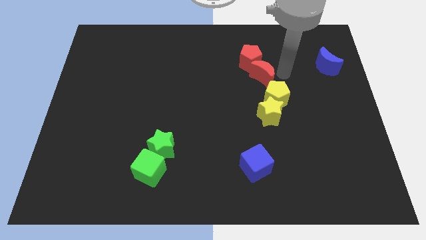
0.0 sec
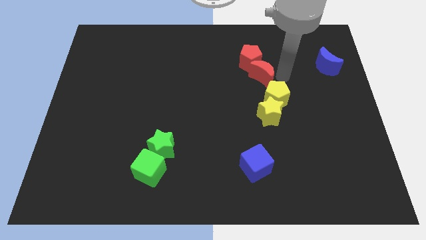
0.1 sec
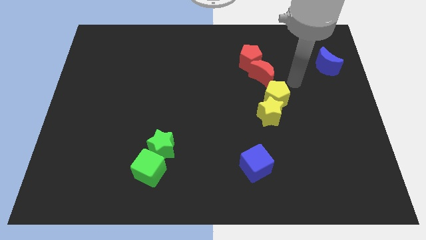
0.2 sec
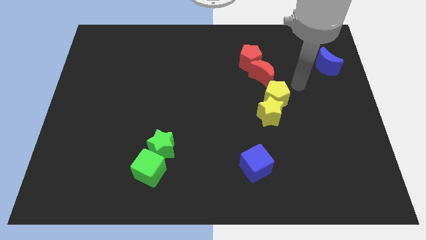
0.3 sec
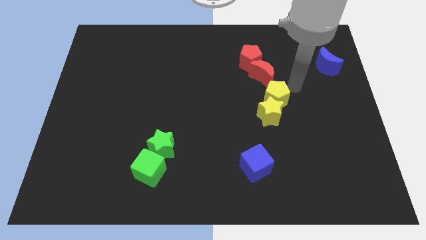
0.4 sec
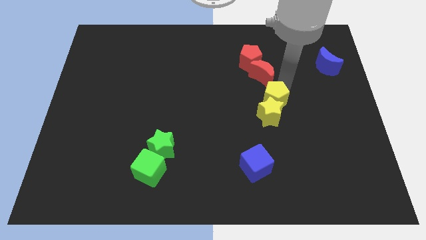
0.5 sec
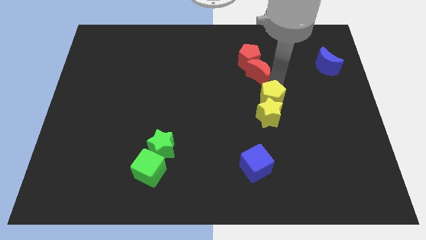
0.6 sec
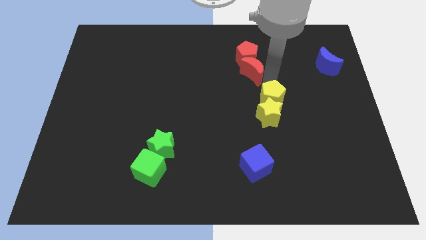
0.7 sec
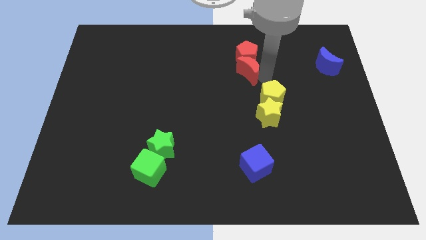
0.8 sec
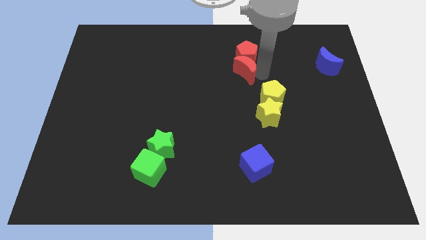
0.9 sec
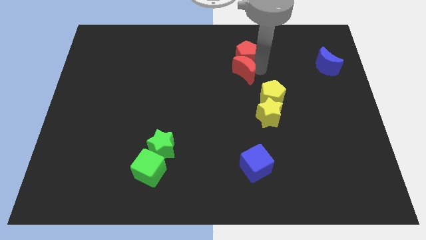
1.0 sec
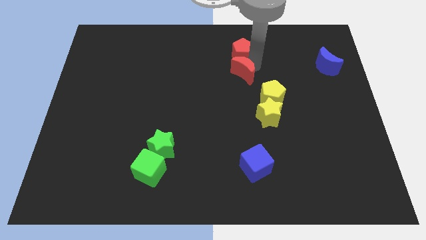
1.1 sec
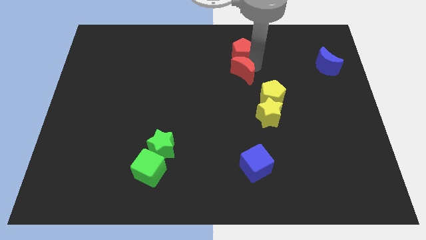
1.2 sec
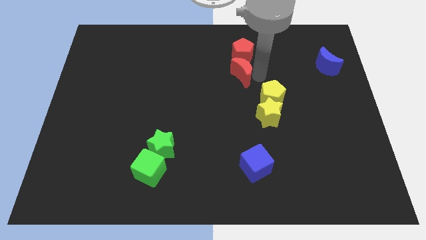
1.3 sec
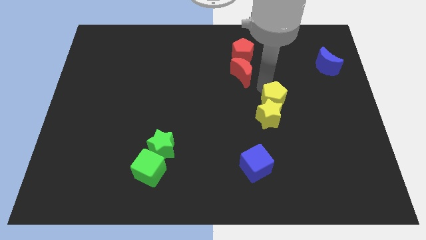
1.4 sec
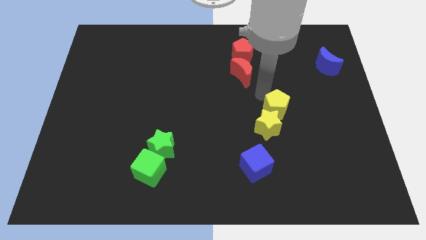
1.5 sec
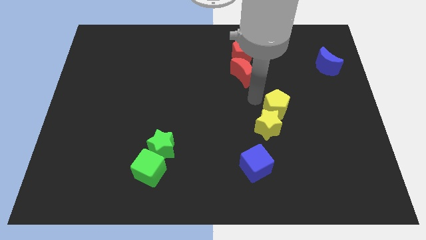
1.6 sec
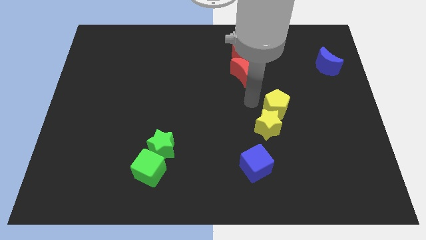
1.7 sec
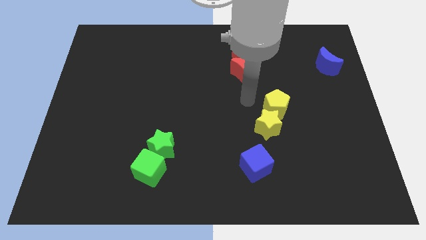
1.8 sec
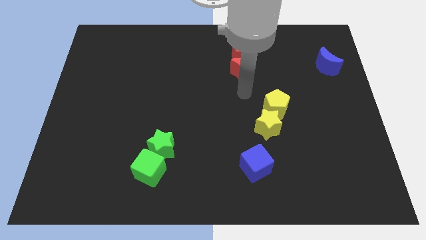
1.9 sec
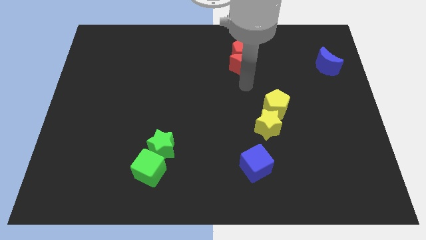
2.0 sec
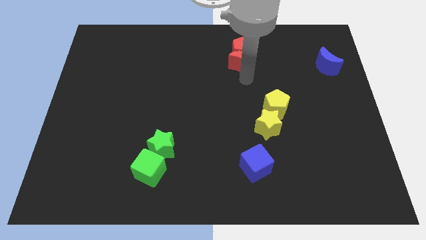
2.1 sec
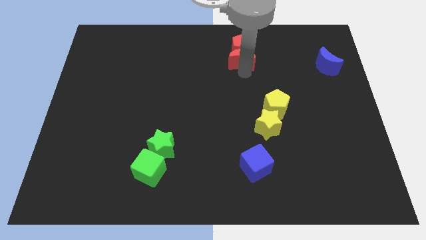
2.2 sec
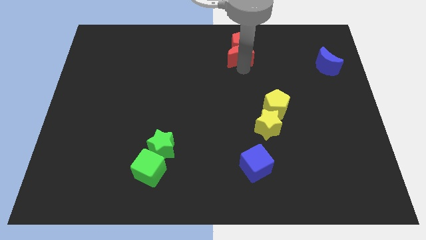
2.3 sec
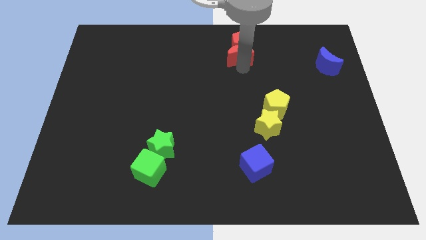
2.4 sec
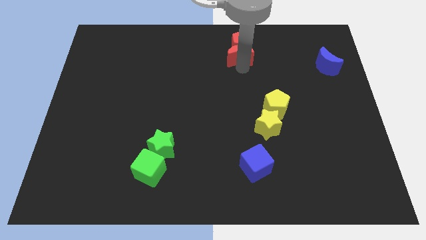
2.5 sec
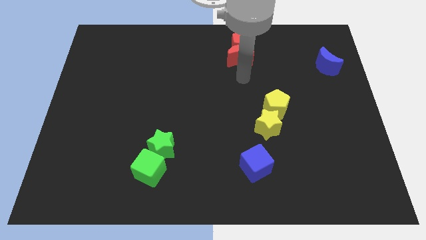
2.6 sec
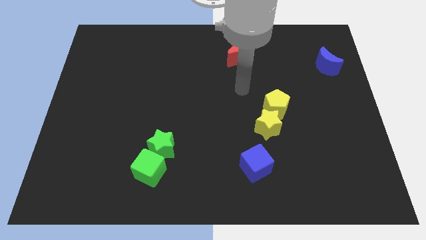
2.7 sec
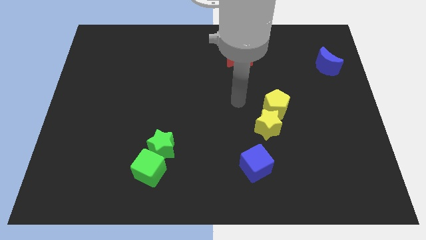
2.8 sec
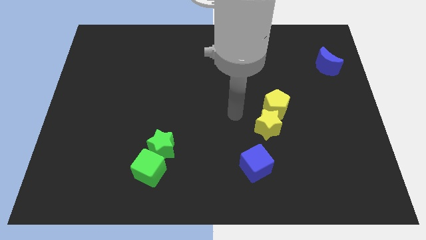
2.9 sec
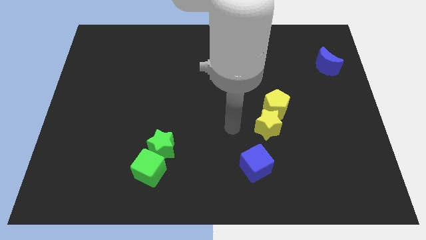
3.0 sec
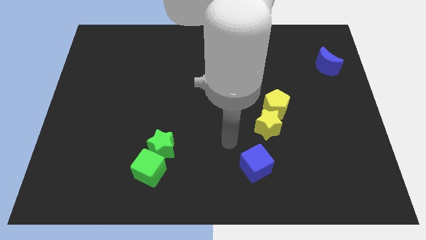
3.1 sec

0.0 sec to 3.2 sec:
push red pentagon and red moon to the top

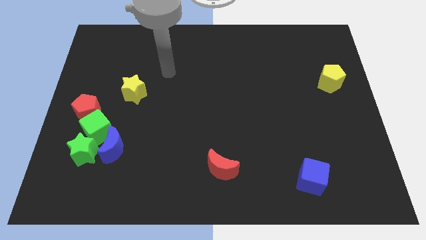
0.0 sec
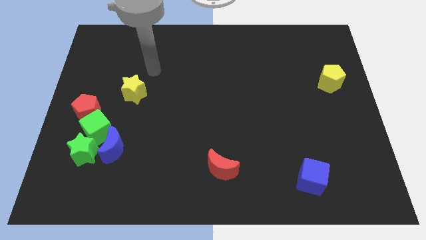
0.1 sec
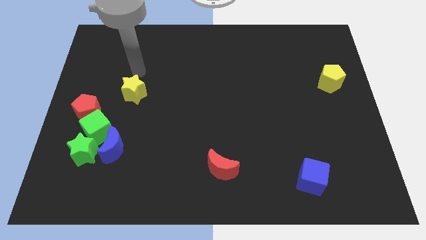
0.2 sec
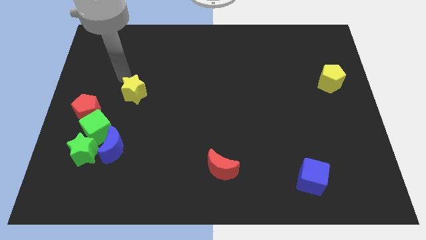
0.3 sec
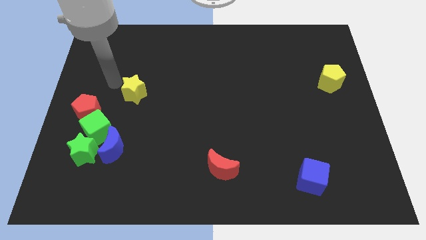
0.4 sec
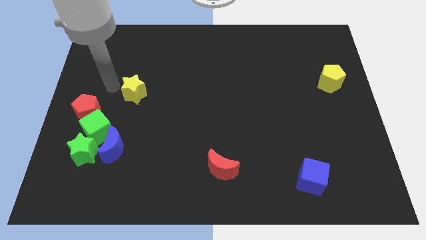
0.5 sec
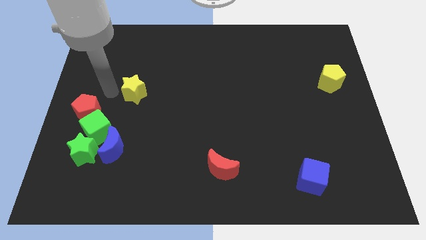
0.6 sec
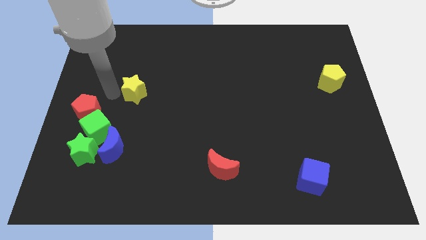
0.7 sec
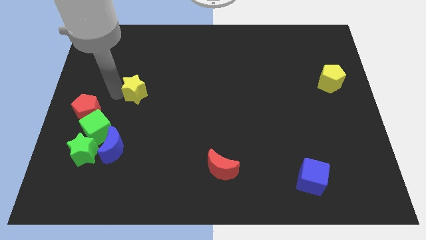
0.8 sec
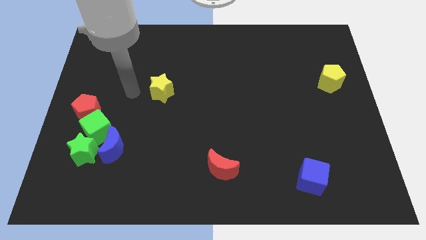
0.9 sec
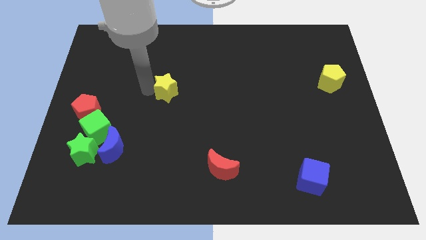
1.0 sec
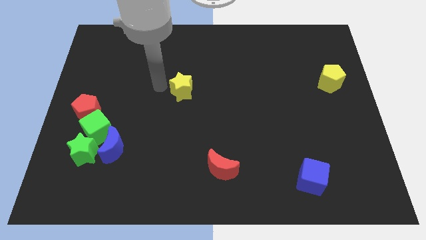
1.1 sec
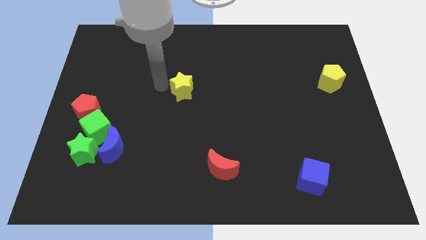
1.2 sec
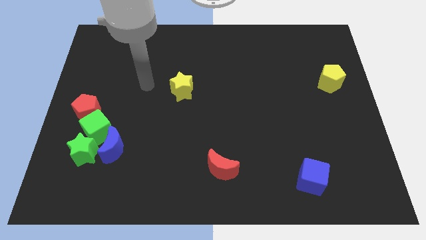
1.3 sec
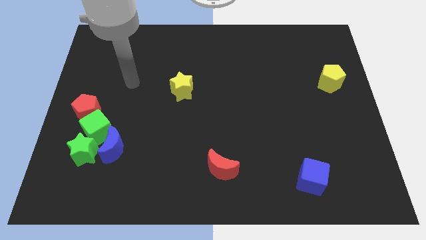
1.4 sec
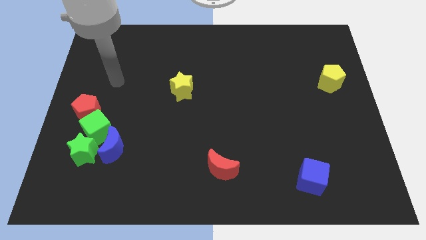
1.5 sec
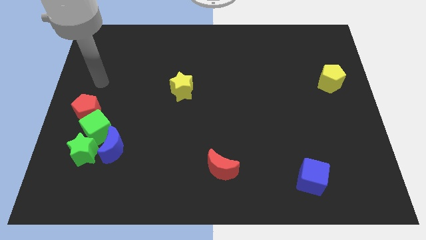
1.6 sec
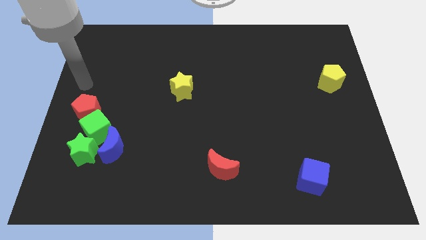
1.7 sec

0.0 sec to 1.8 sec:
push the yellow star to the center of the board

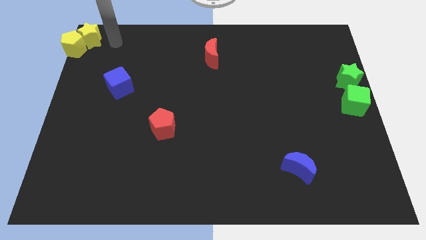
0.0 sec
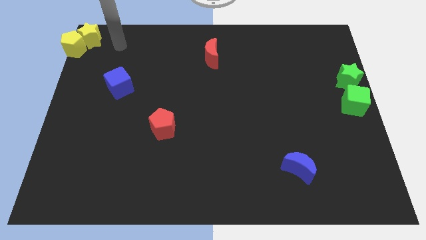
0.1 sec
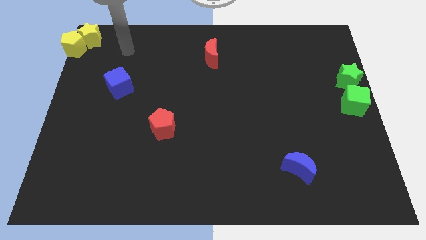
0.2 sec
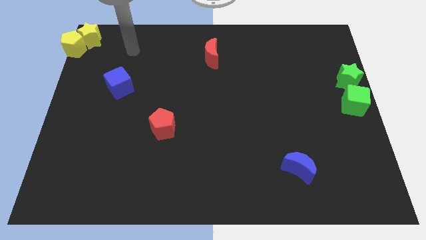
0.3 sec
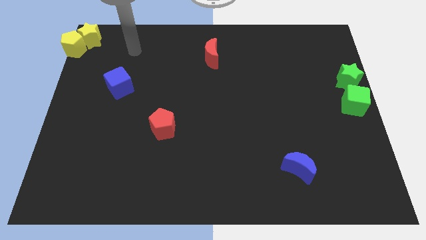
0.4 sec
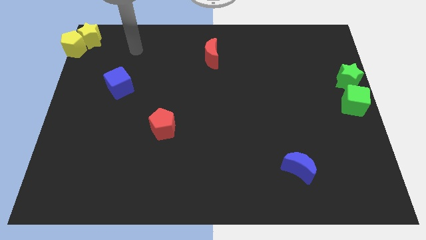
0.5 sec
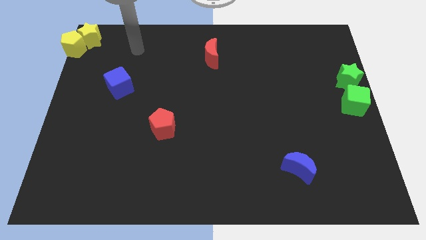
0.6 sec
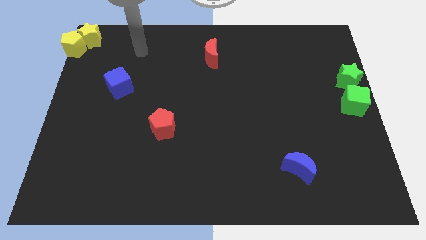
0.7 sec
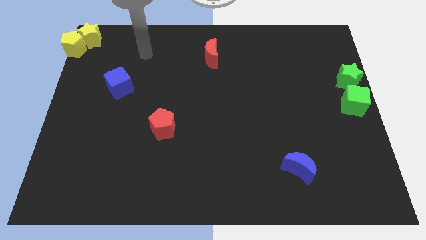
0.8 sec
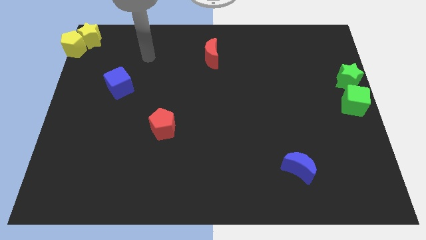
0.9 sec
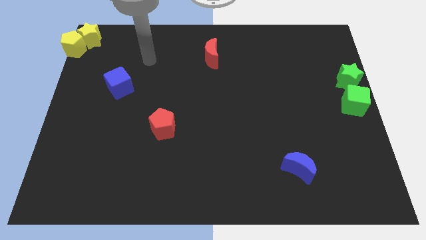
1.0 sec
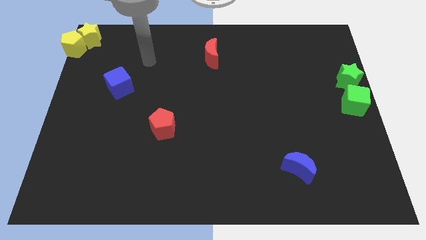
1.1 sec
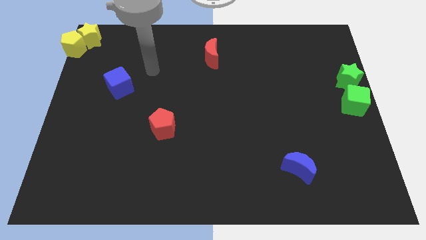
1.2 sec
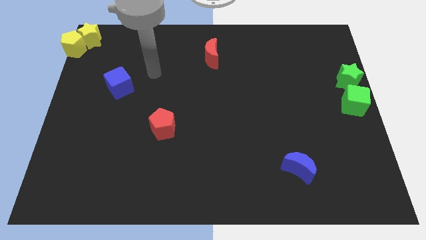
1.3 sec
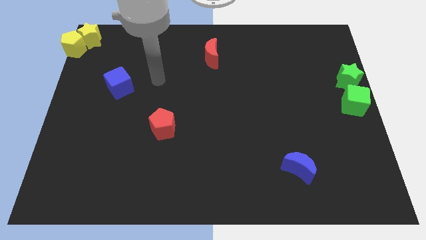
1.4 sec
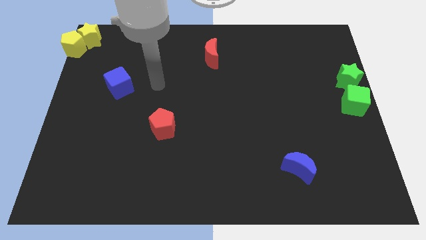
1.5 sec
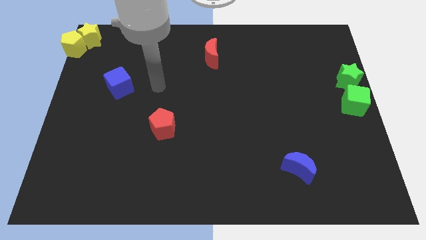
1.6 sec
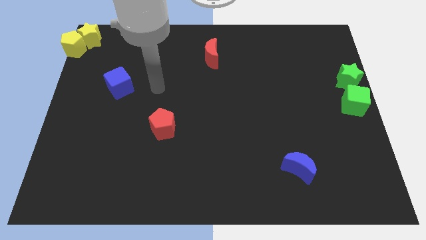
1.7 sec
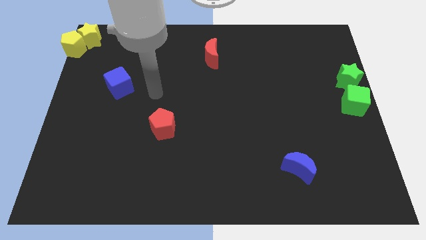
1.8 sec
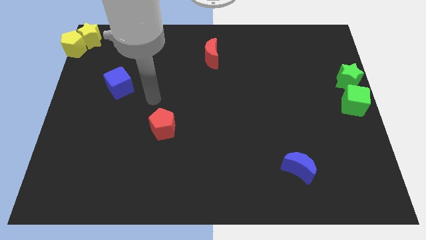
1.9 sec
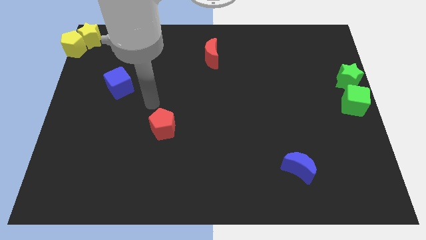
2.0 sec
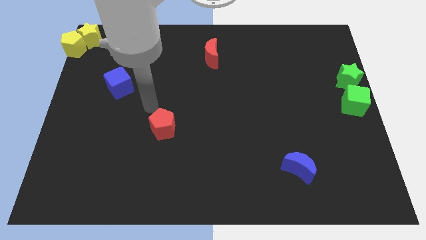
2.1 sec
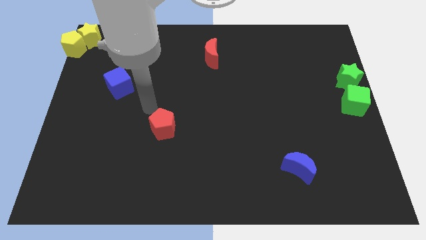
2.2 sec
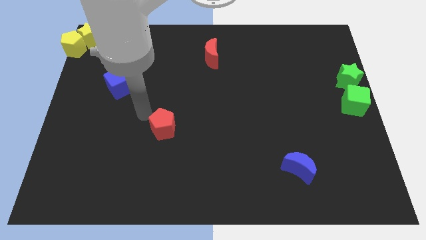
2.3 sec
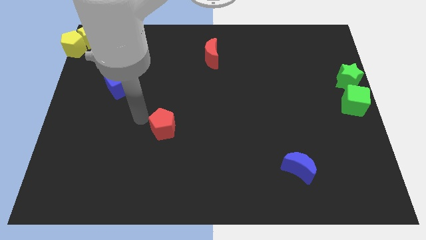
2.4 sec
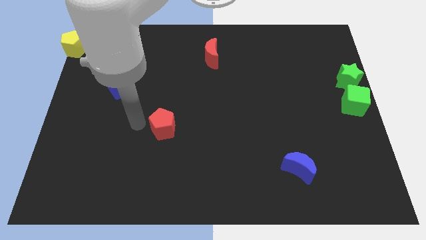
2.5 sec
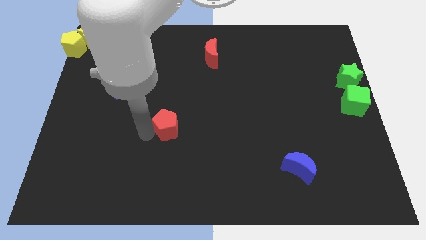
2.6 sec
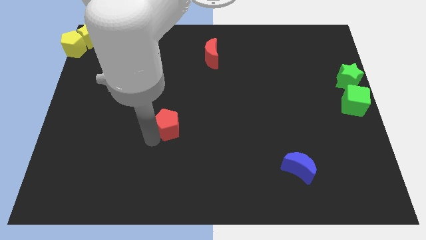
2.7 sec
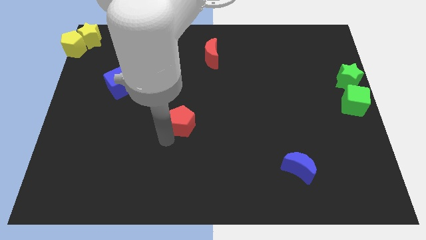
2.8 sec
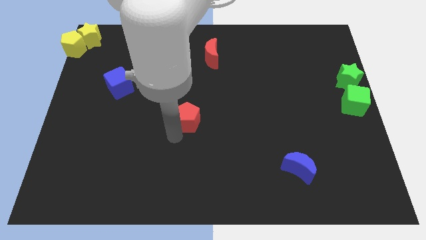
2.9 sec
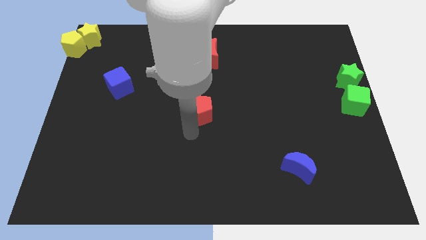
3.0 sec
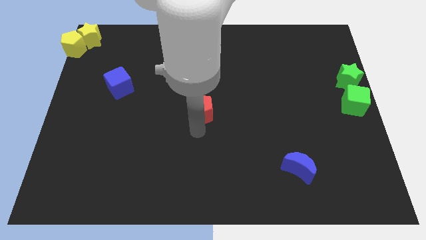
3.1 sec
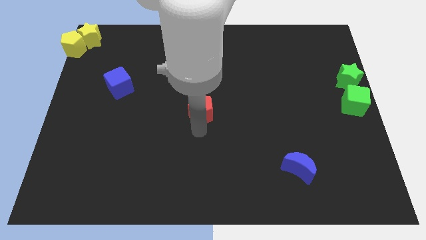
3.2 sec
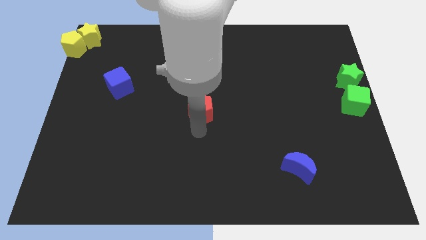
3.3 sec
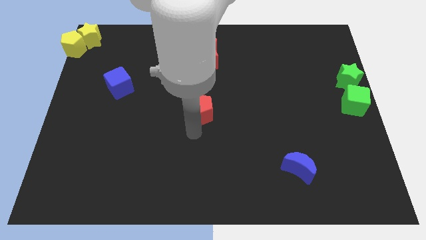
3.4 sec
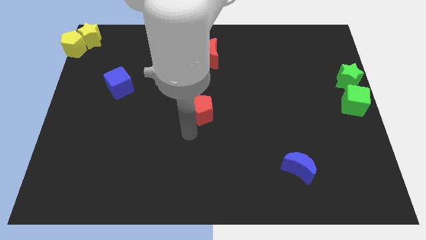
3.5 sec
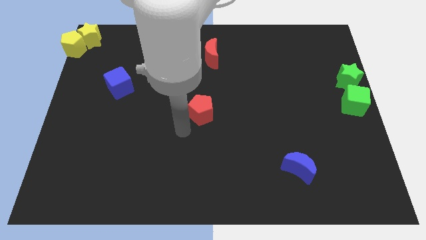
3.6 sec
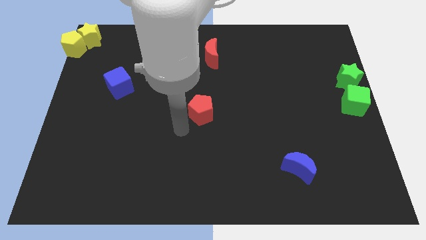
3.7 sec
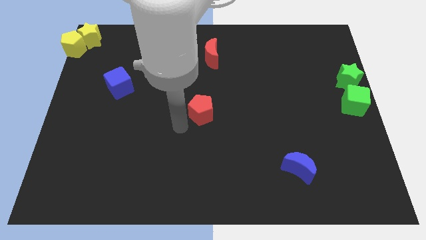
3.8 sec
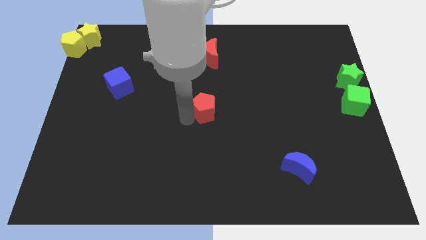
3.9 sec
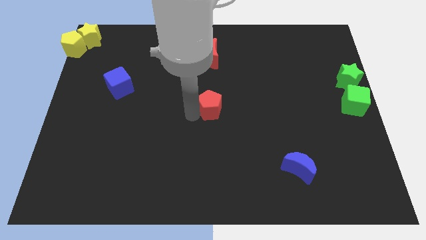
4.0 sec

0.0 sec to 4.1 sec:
place the red pentagon at the center of the board
